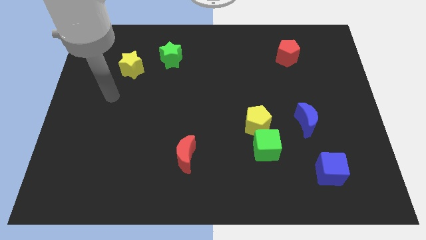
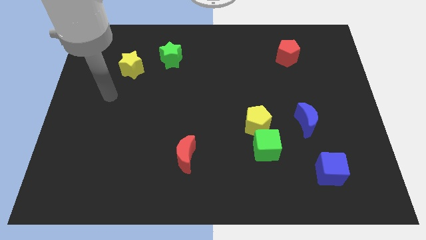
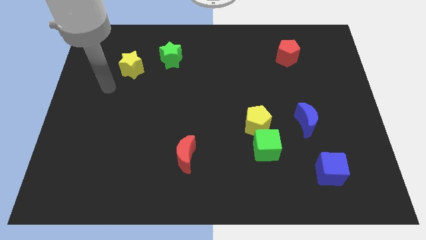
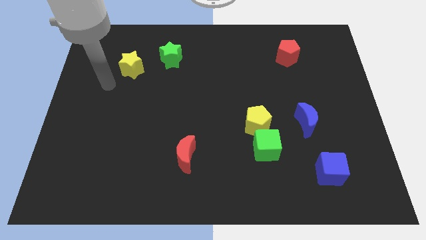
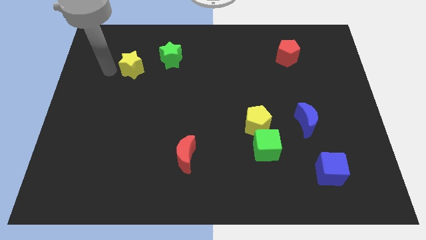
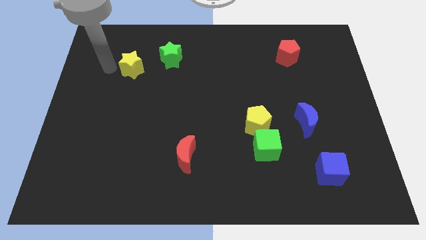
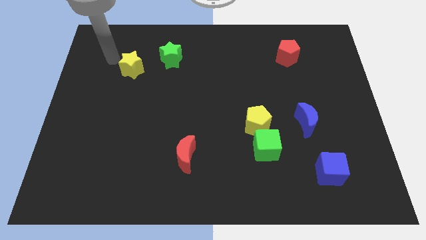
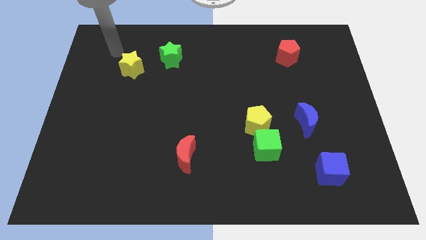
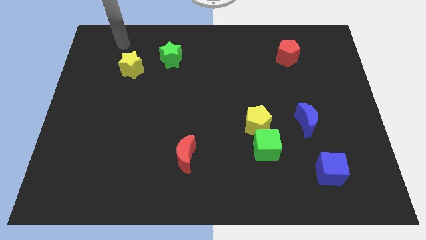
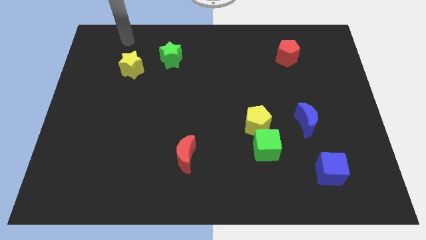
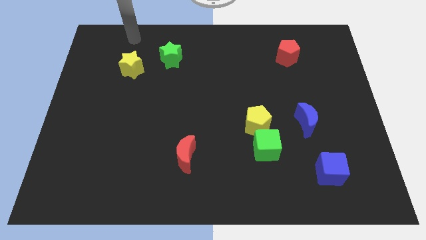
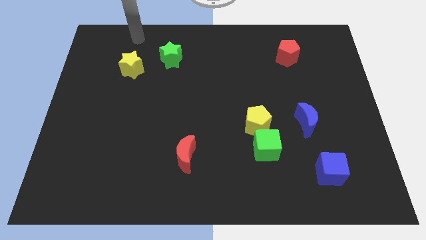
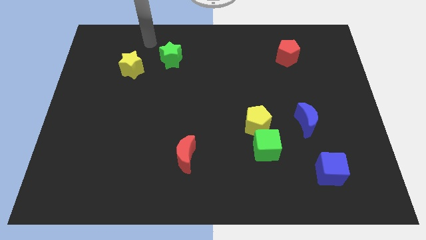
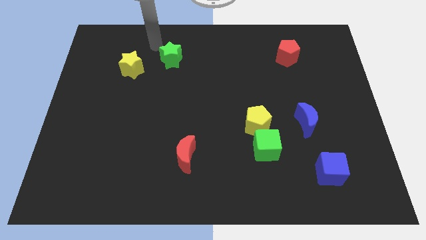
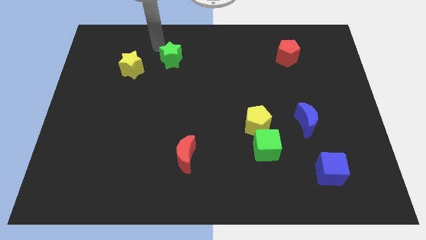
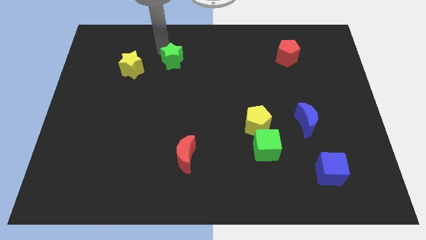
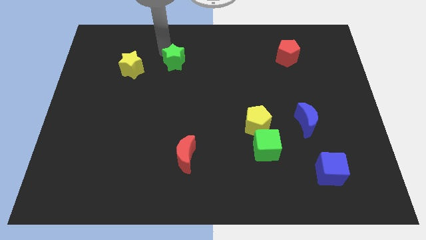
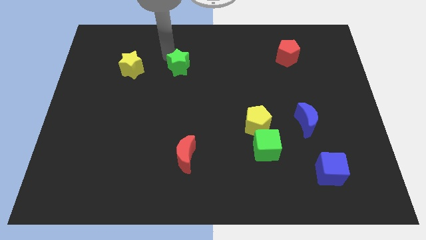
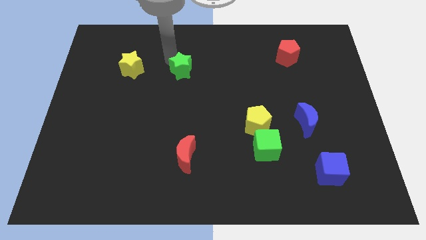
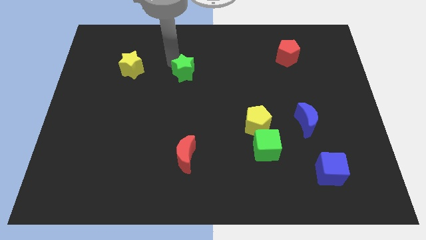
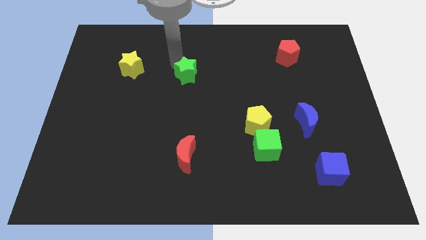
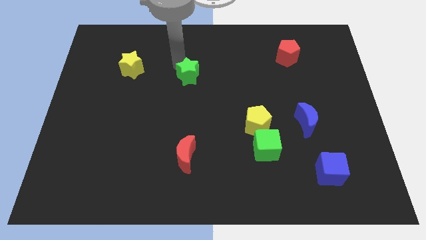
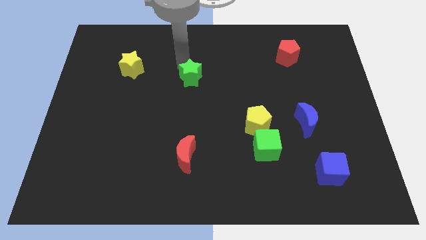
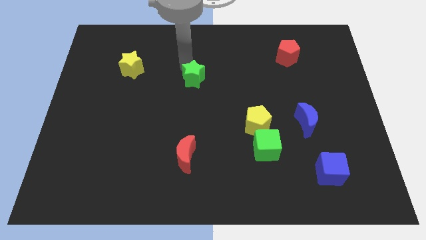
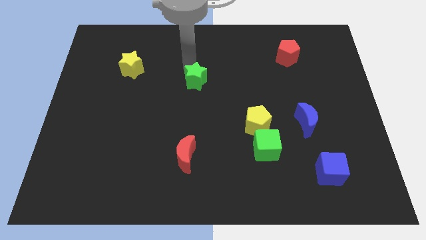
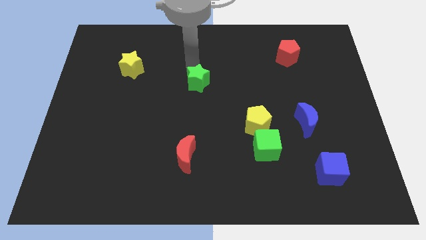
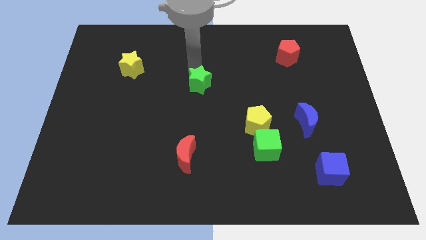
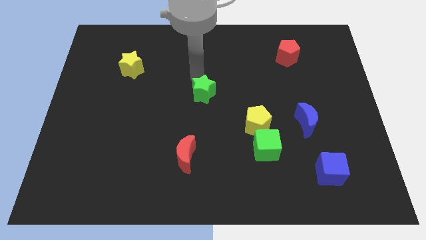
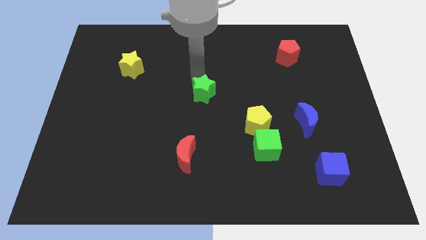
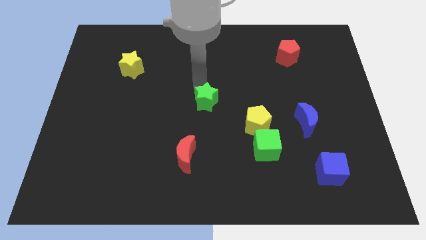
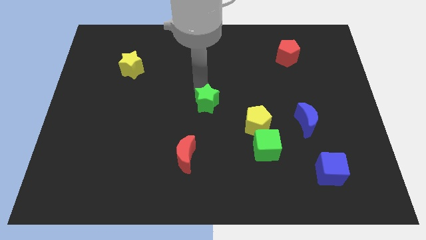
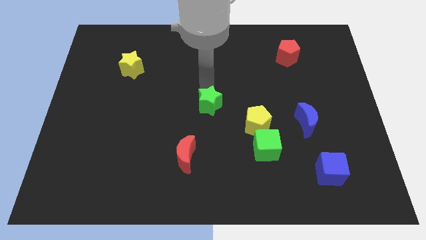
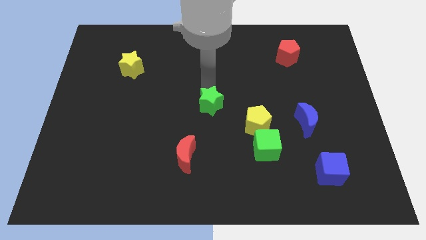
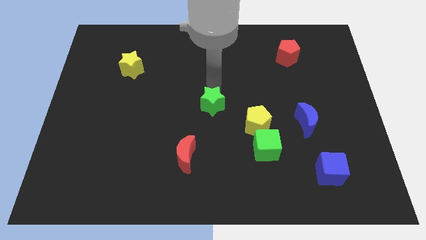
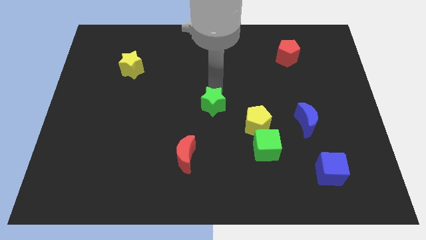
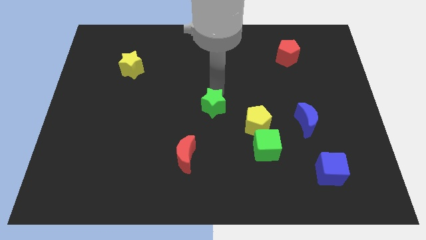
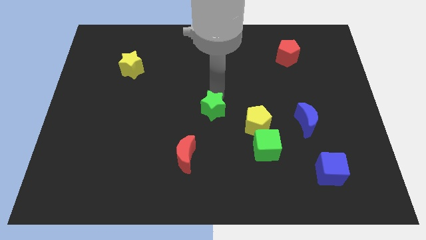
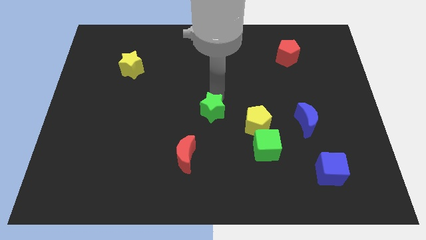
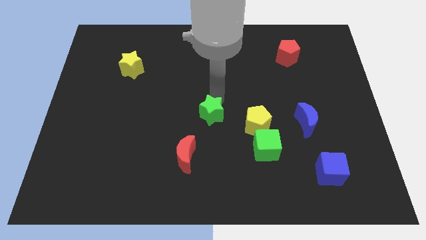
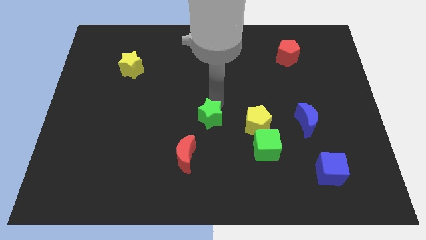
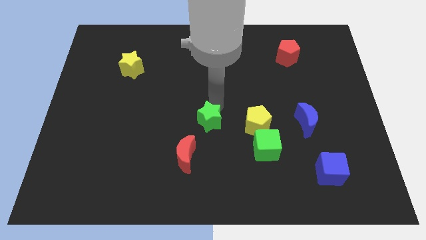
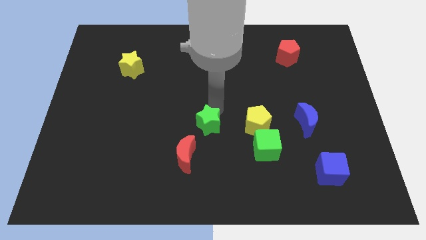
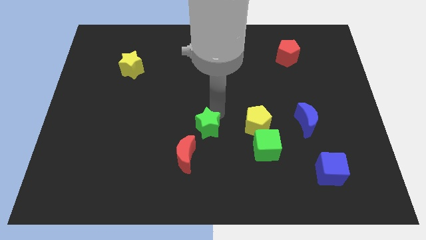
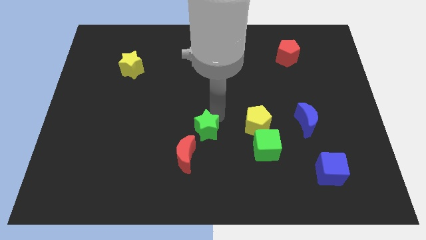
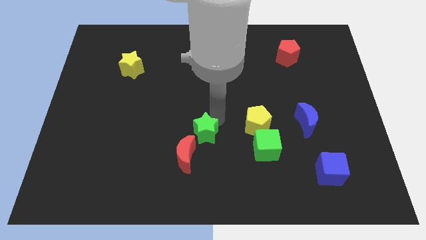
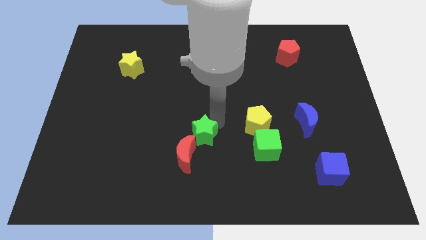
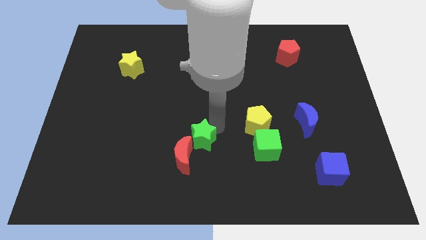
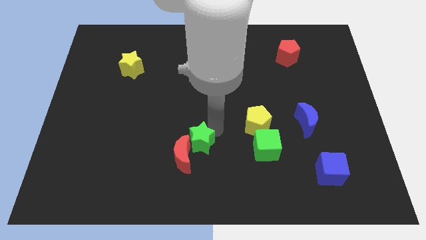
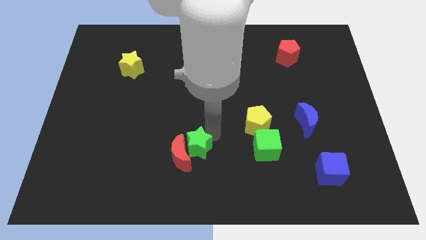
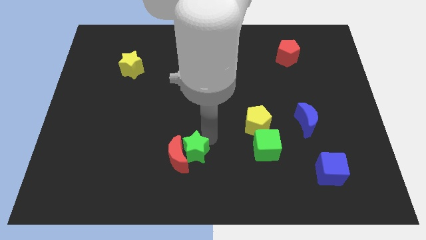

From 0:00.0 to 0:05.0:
push the green star to the red moon

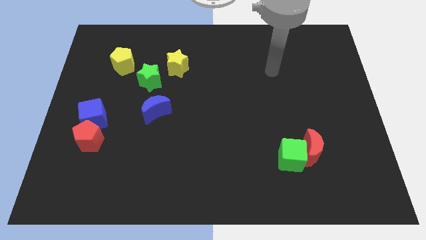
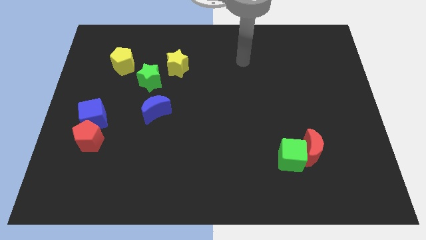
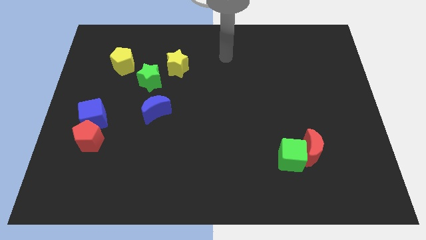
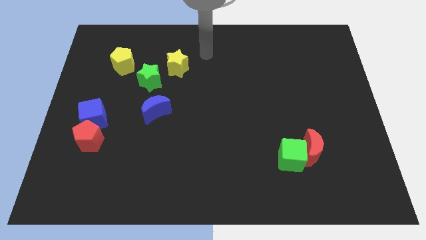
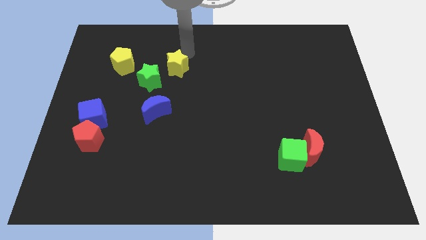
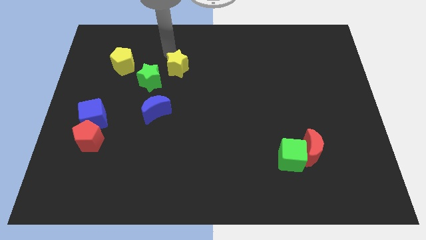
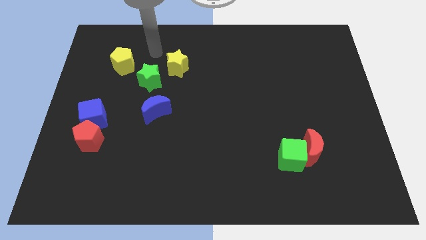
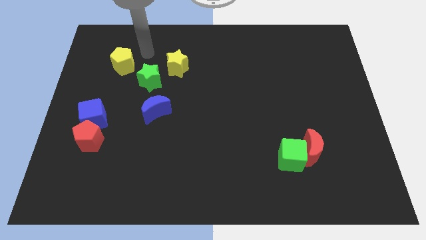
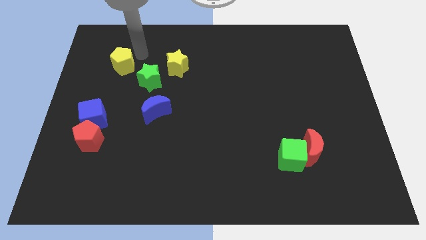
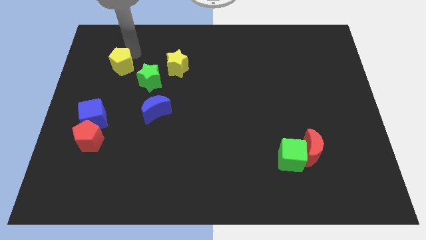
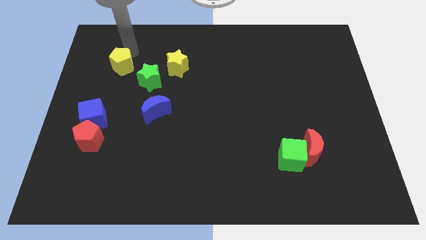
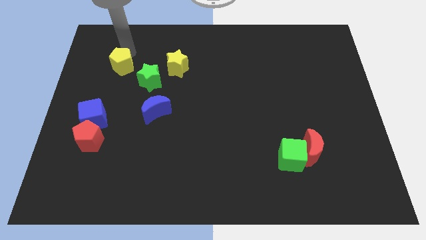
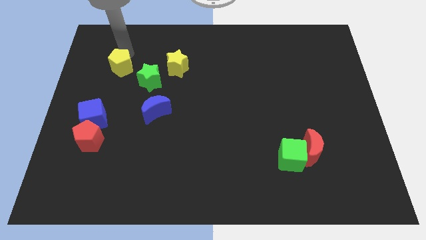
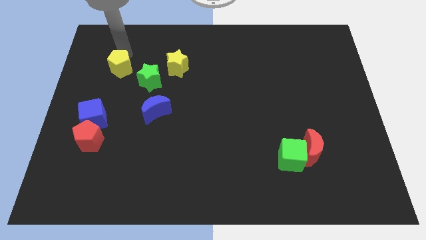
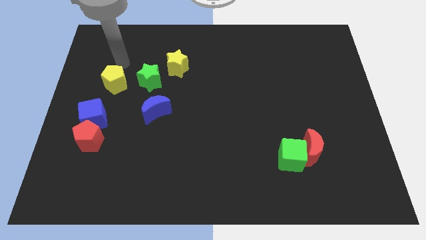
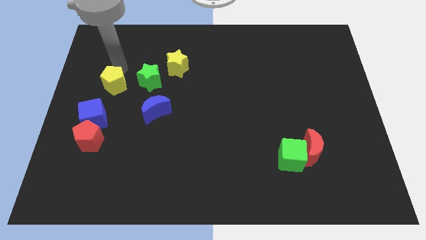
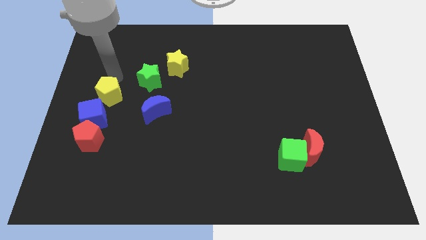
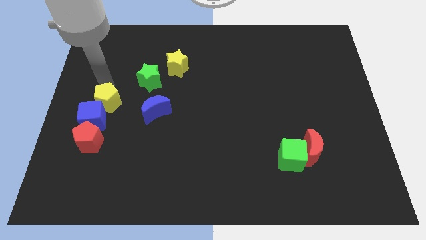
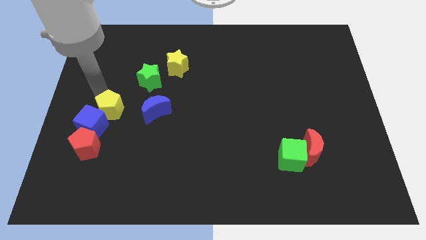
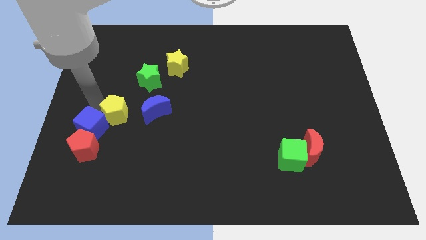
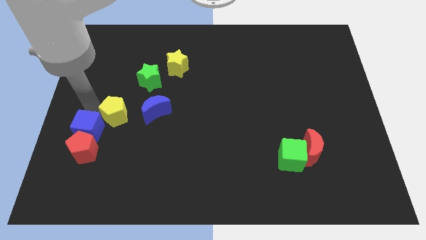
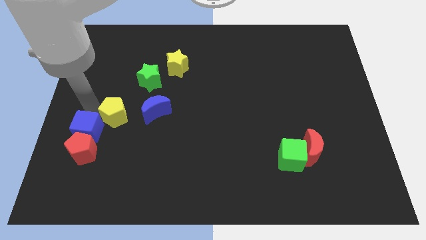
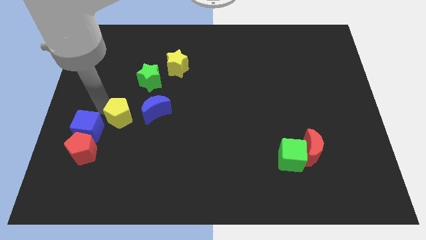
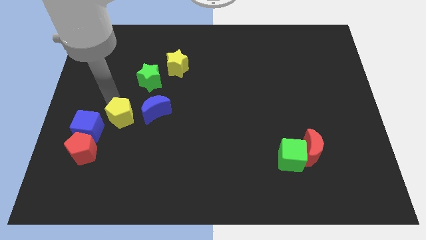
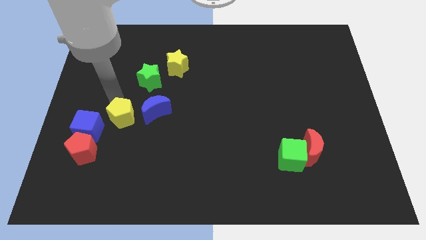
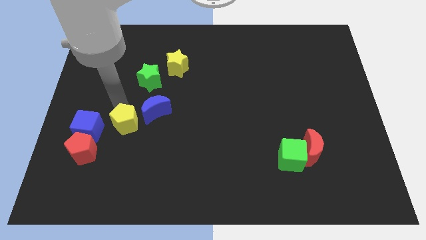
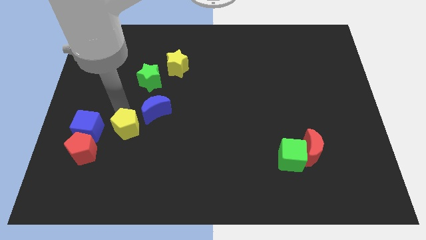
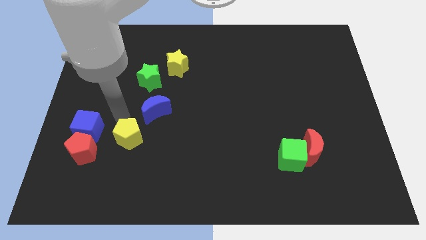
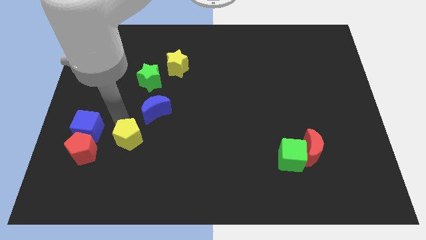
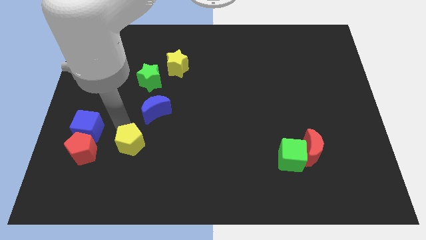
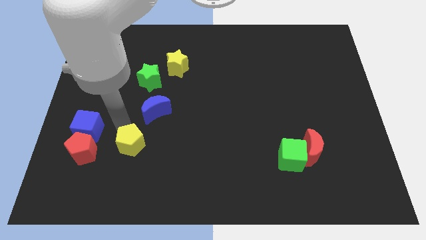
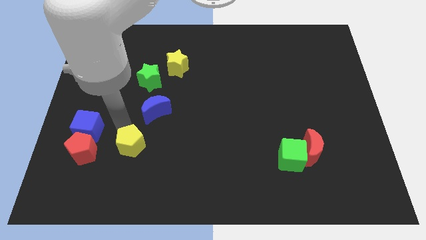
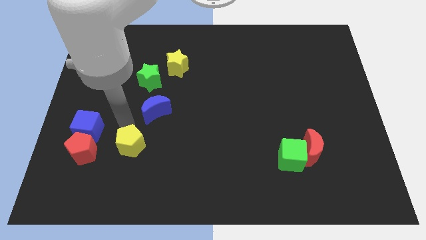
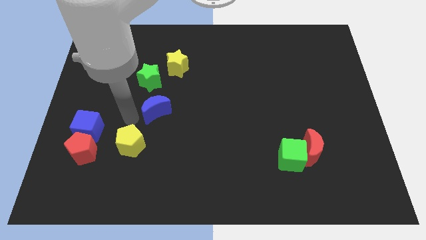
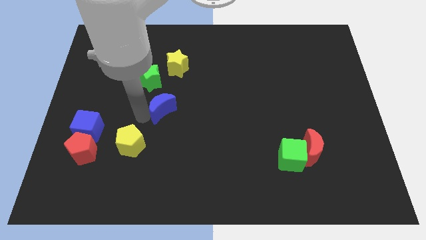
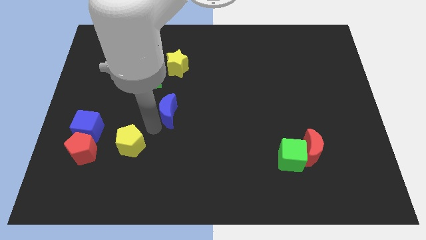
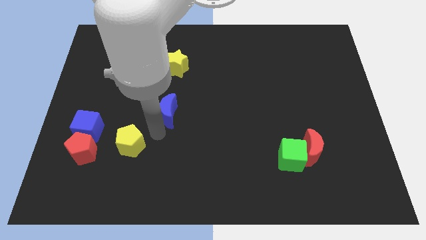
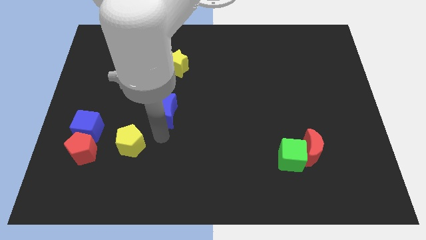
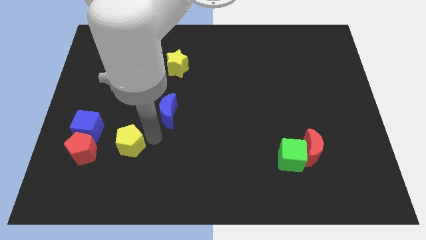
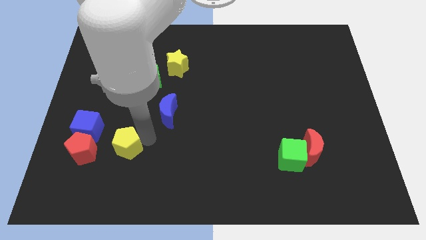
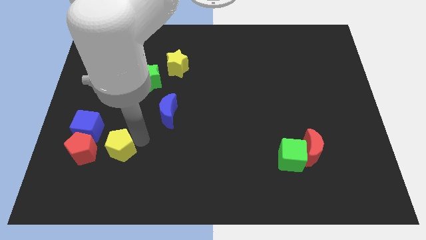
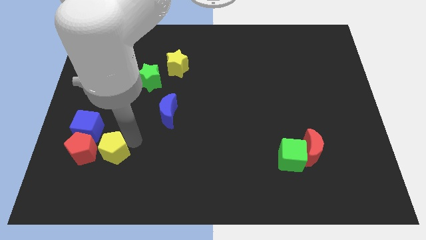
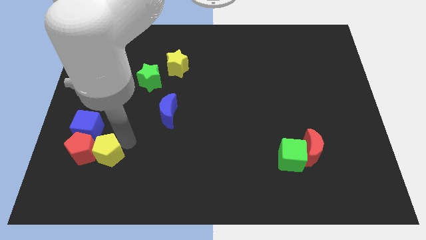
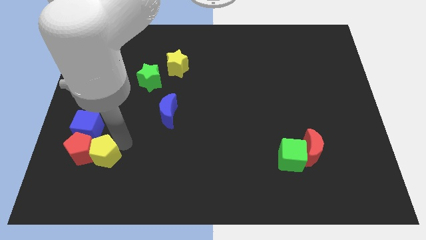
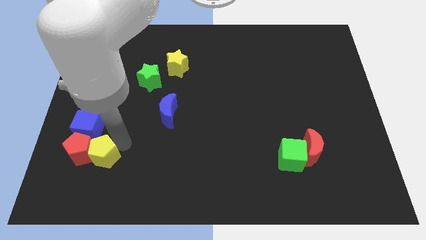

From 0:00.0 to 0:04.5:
push the yellow pentagon close to the red pentagon
